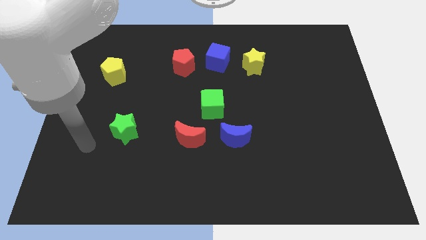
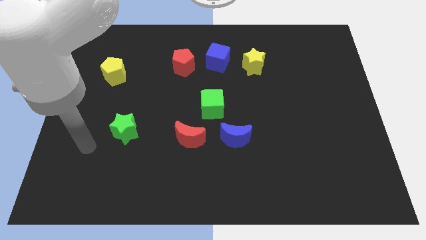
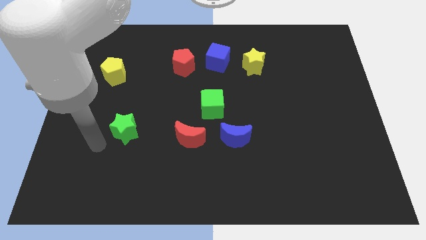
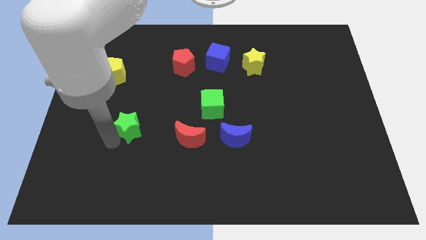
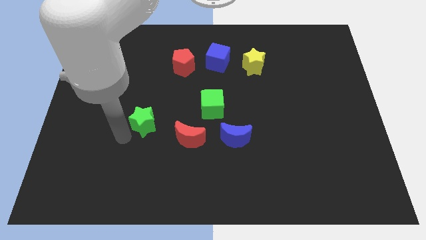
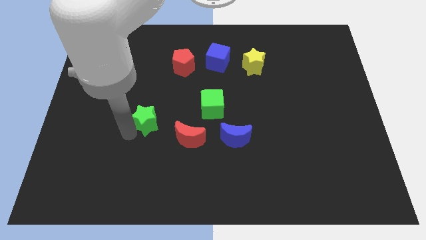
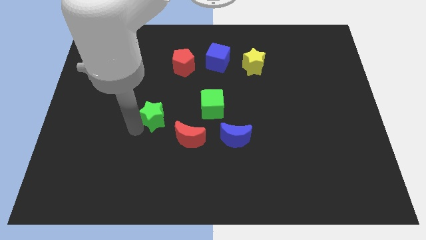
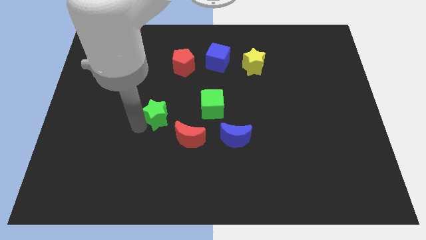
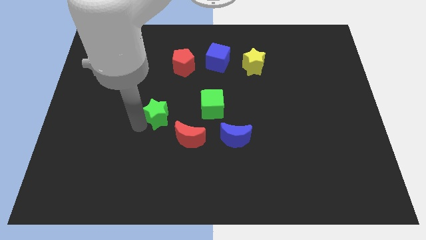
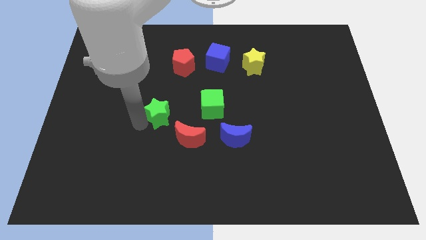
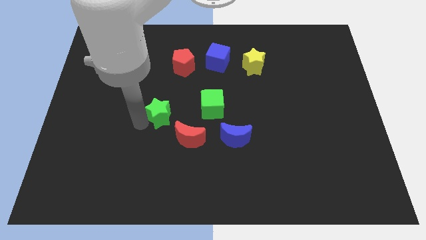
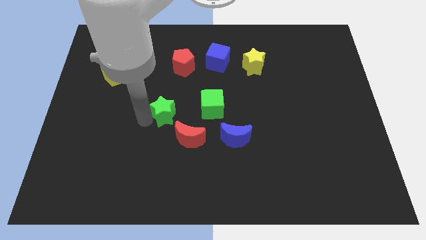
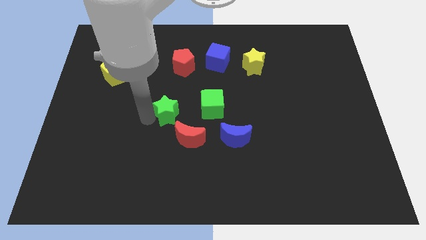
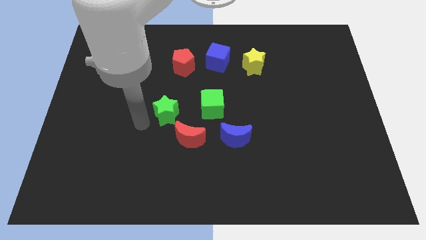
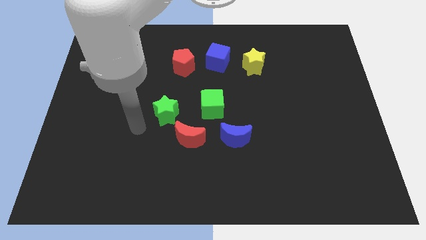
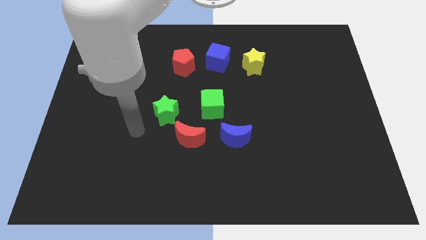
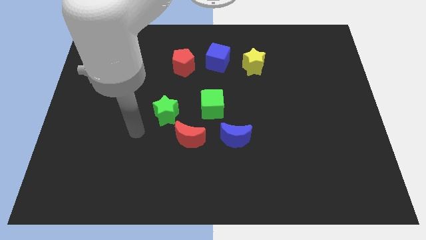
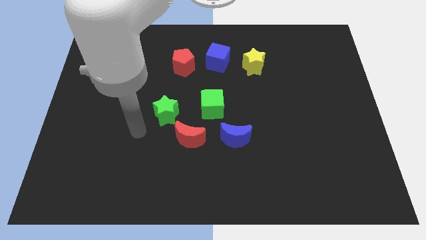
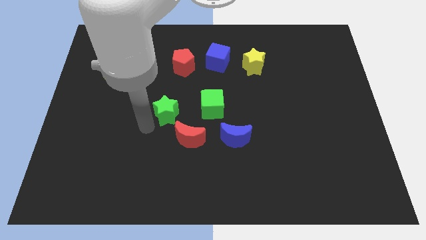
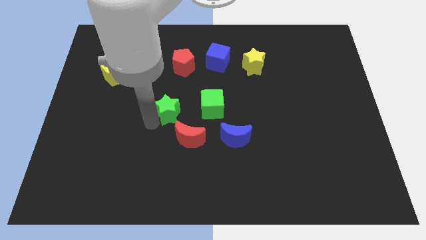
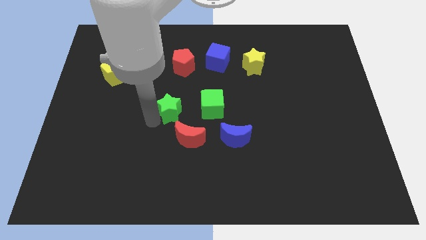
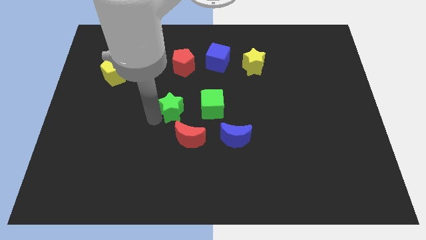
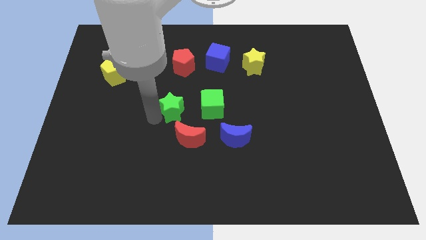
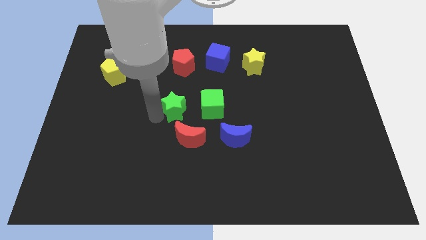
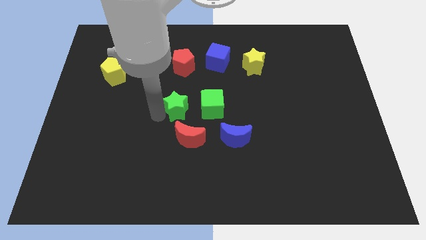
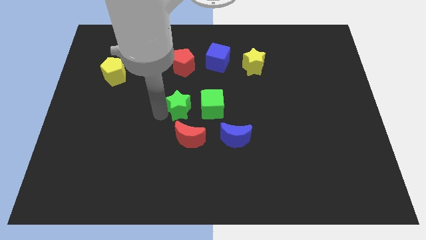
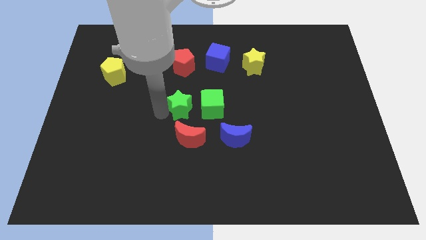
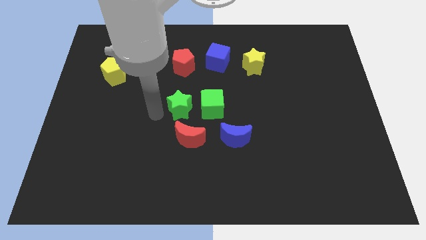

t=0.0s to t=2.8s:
place the green star to the left of green cube

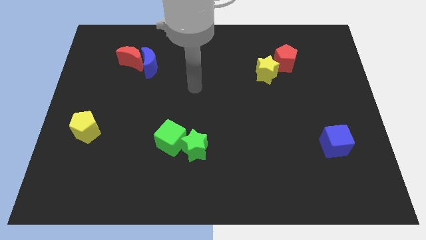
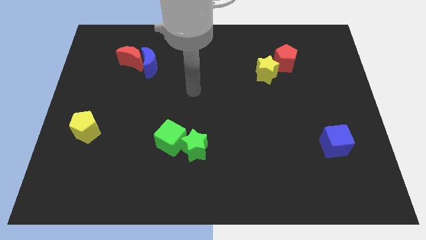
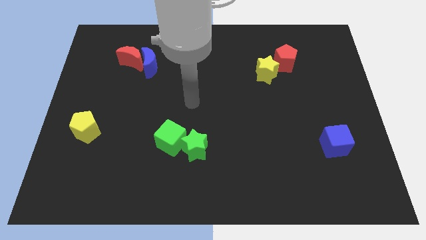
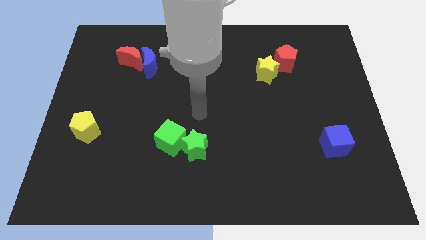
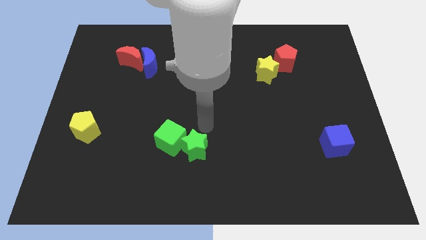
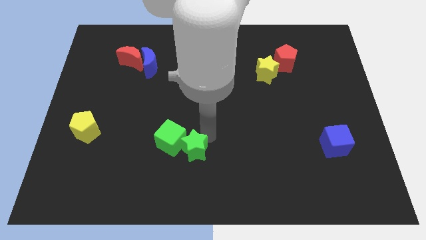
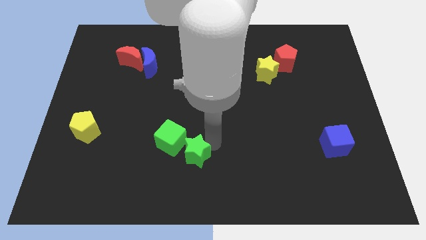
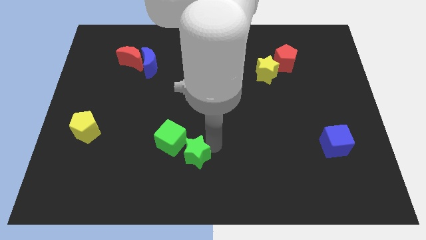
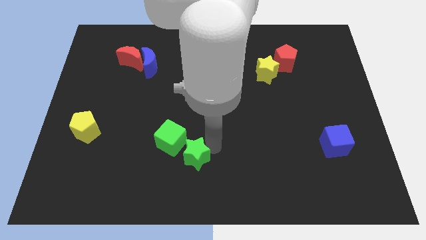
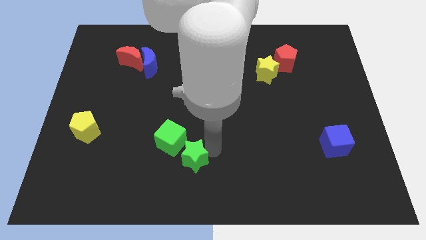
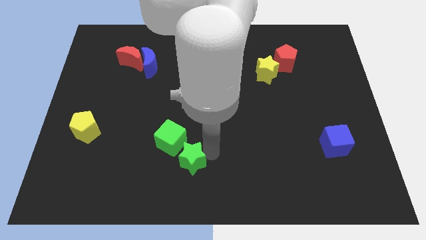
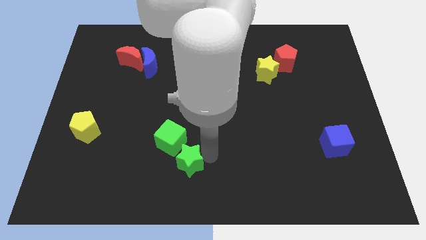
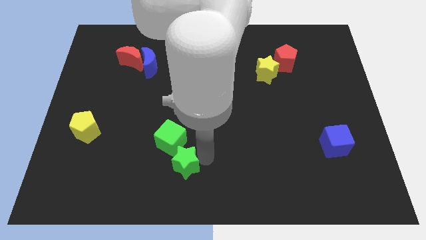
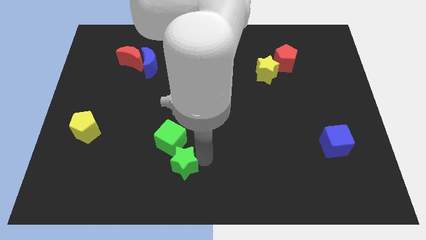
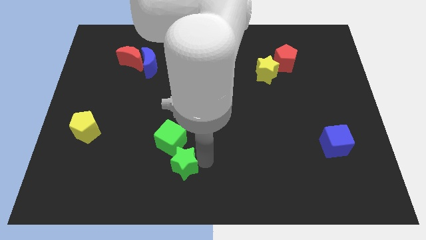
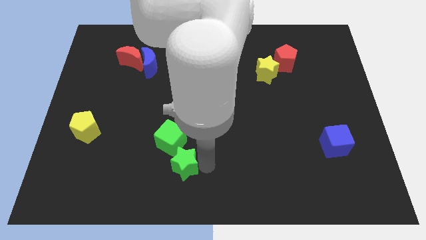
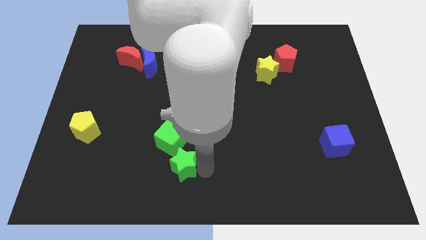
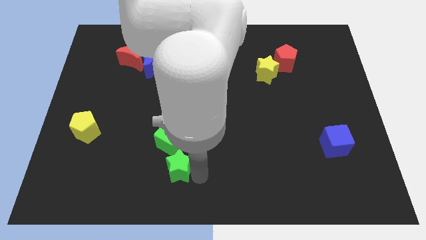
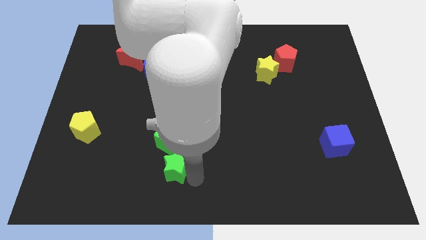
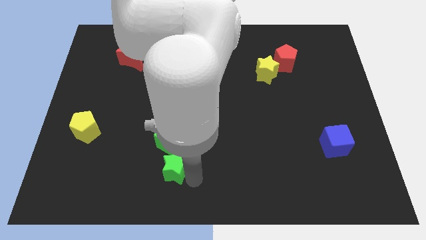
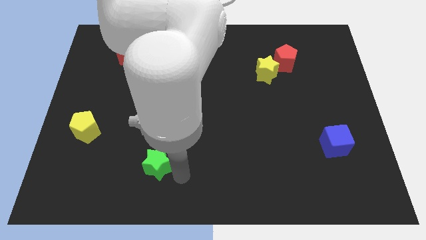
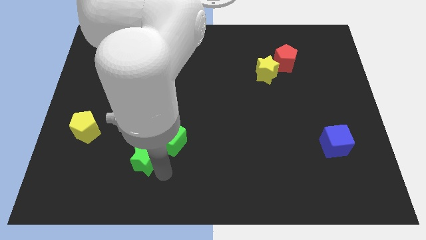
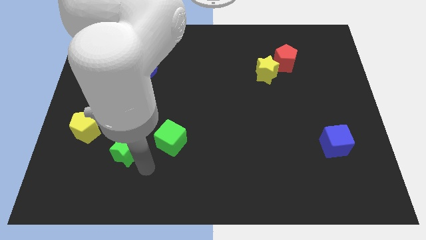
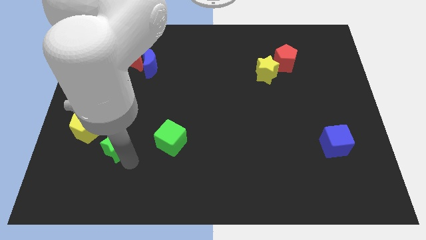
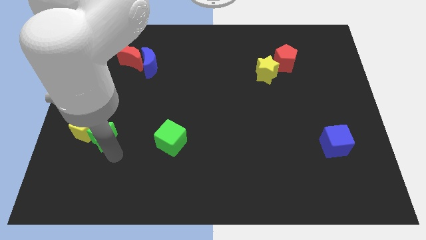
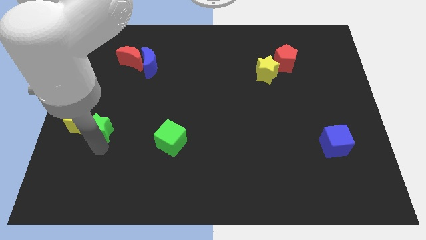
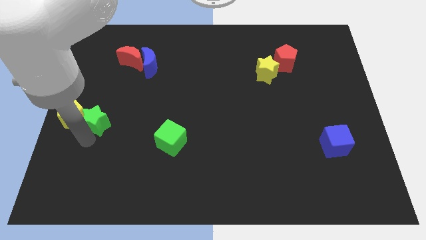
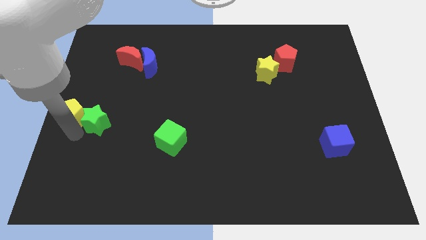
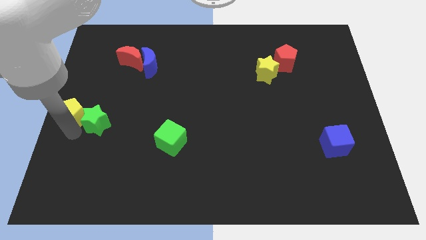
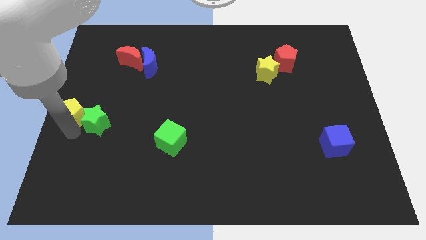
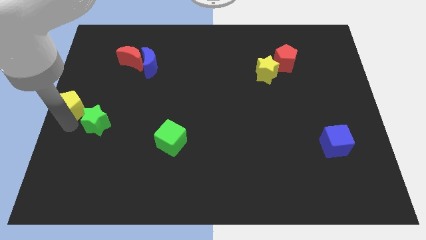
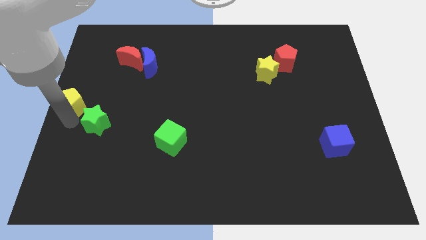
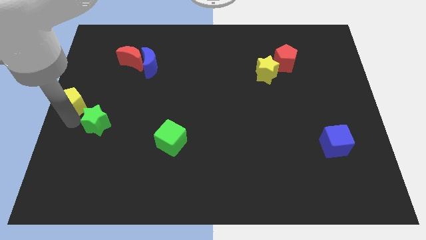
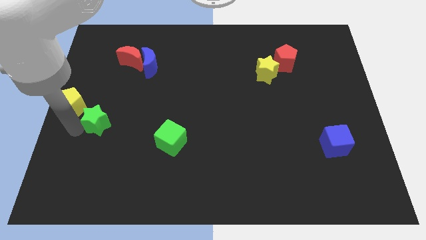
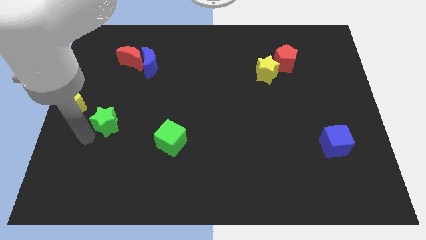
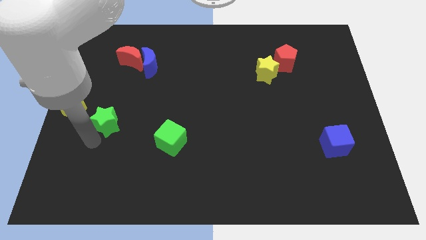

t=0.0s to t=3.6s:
make a diagonal line out of green blocks and the yellow pentagon

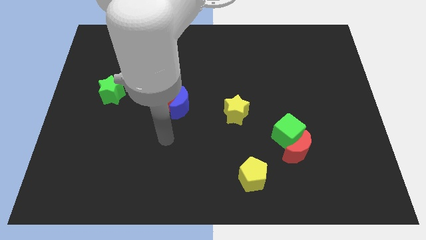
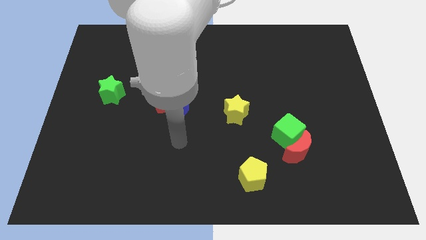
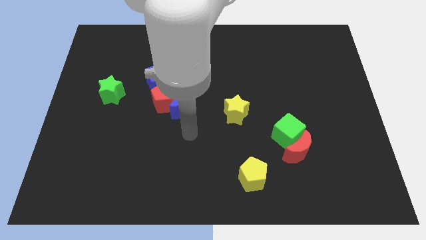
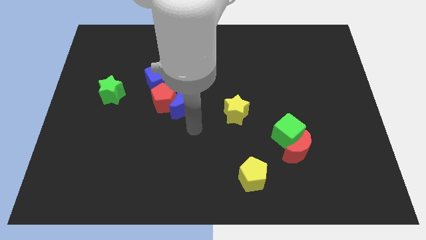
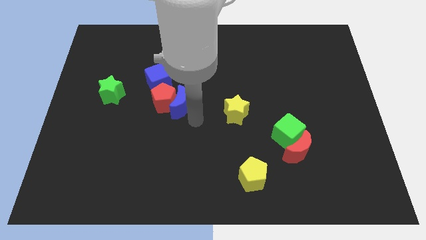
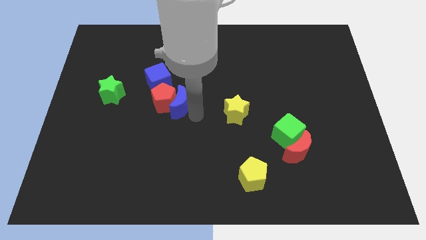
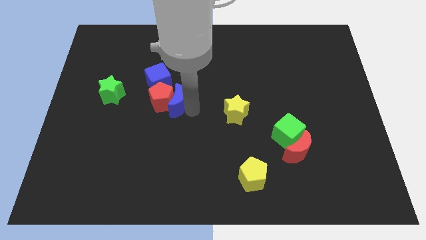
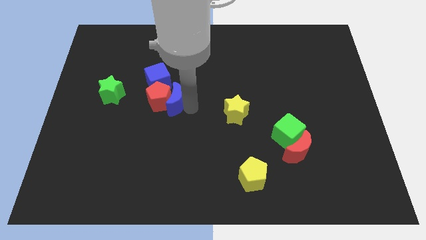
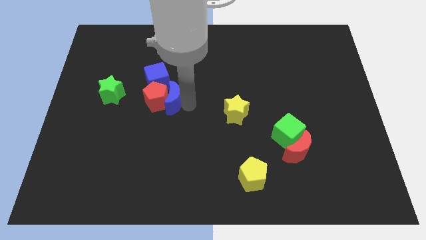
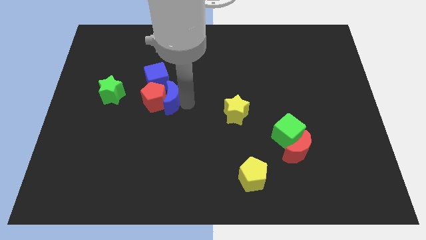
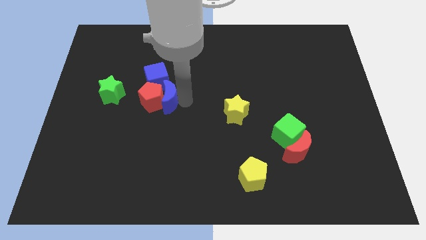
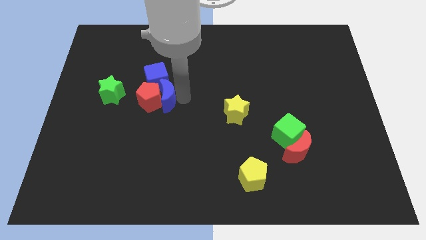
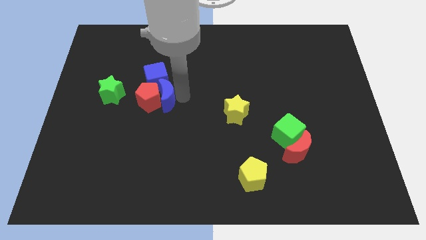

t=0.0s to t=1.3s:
push the blue crescent and red pentagon slightly left side

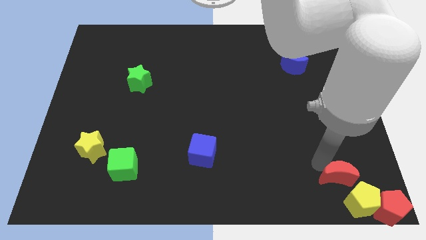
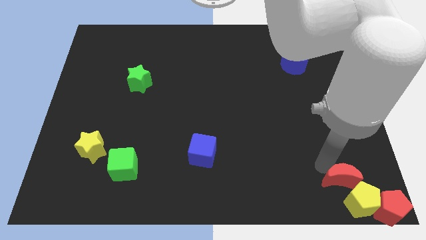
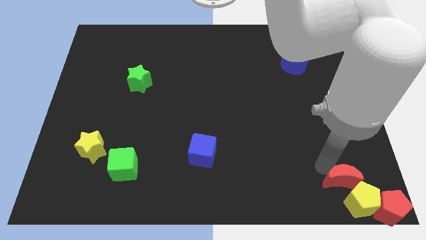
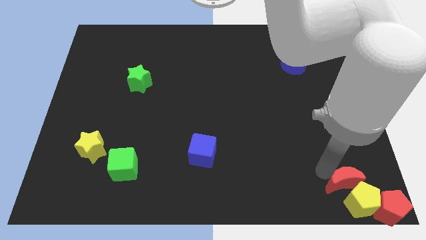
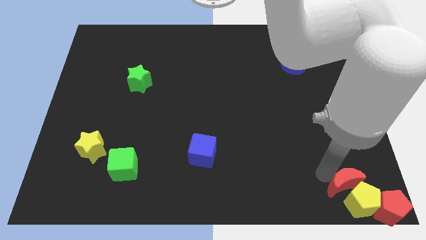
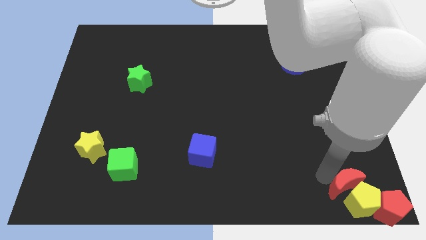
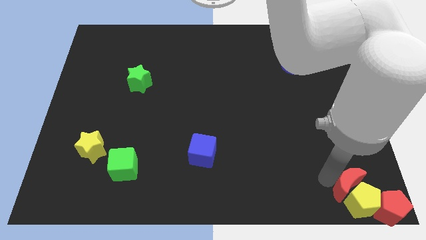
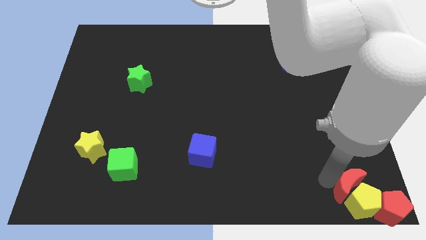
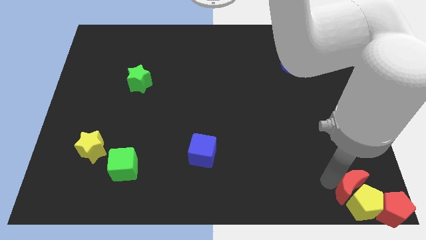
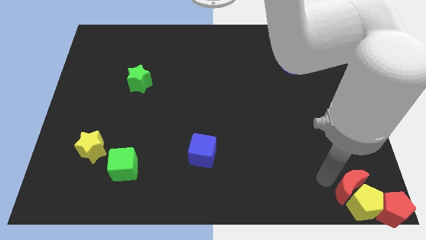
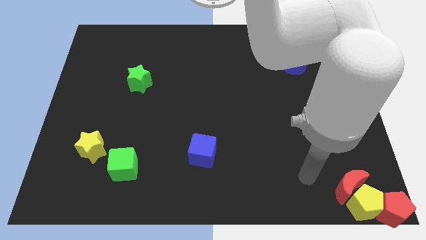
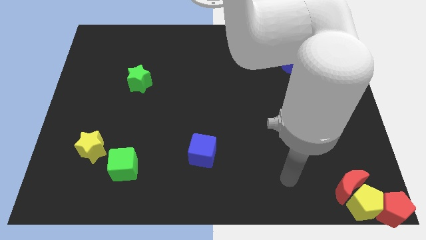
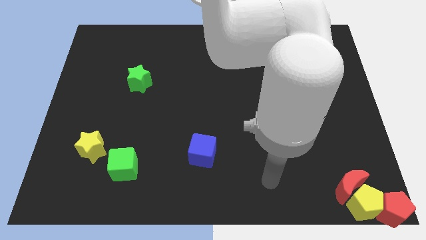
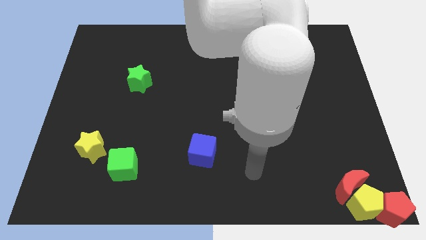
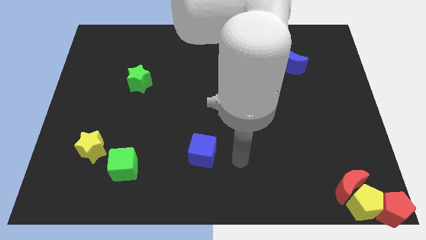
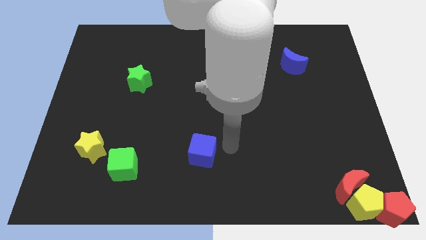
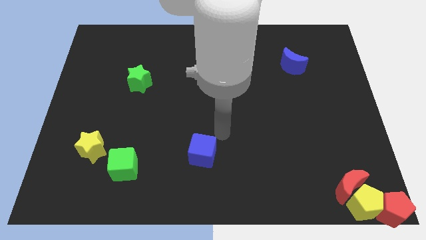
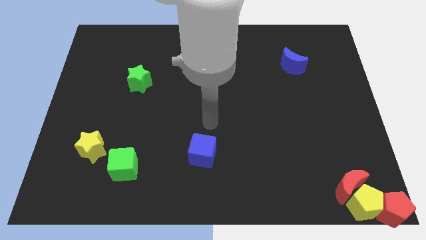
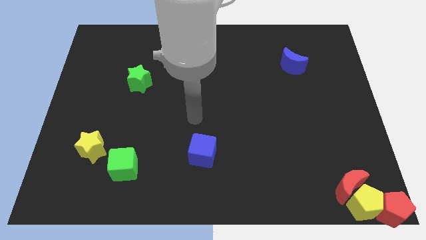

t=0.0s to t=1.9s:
push red moon into yellow pentagon
